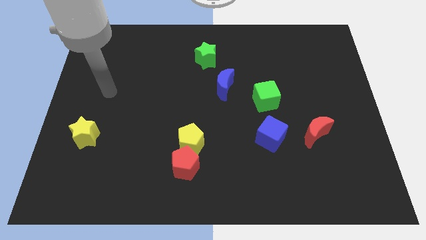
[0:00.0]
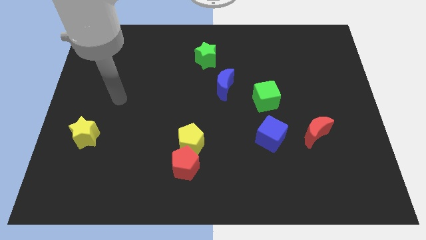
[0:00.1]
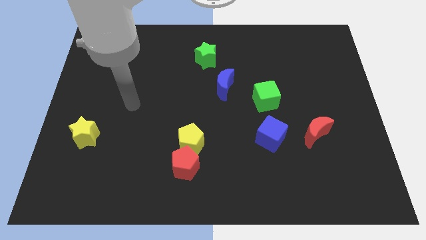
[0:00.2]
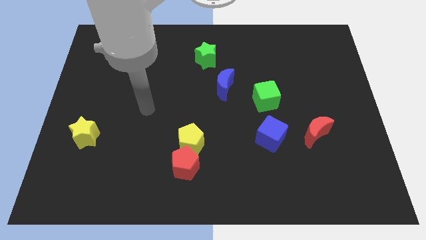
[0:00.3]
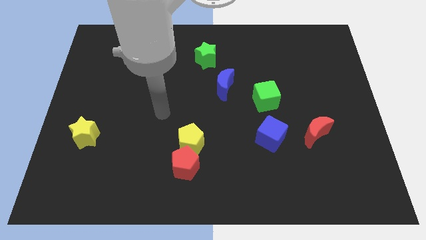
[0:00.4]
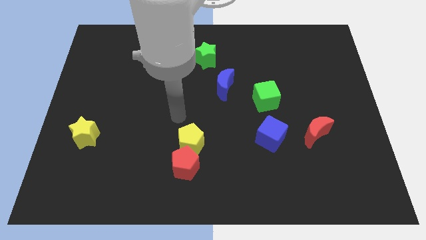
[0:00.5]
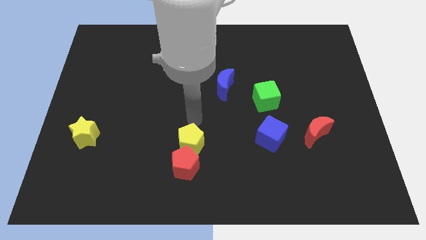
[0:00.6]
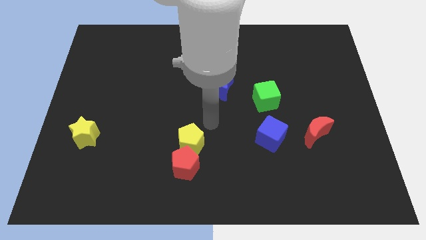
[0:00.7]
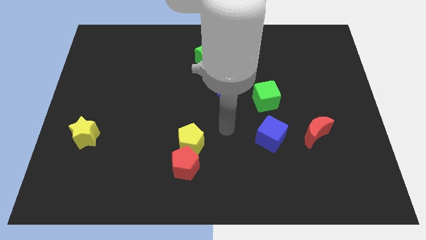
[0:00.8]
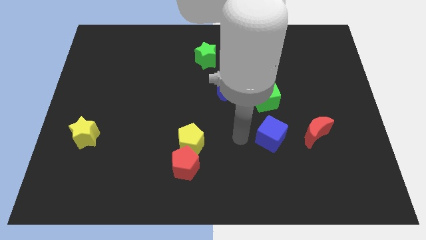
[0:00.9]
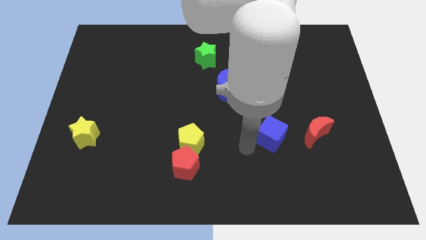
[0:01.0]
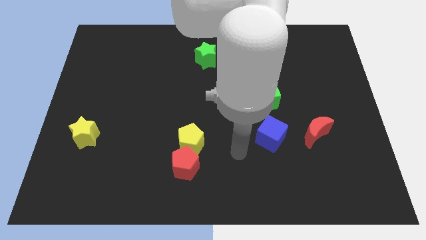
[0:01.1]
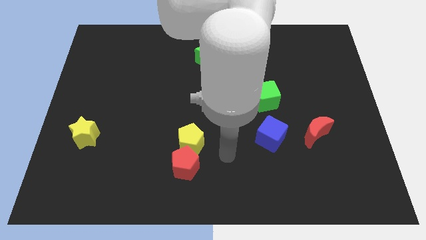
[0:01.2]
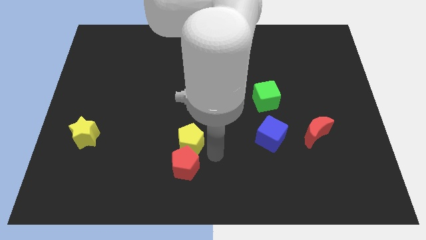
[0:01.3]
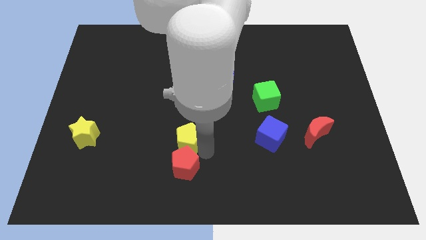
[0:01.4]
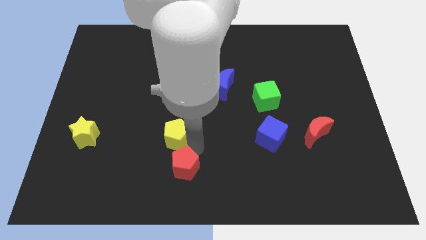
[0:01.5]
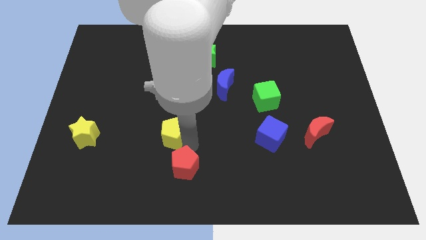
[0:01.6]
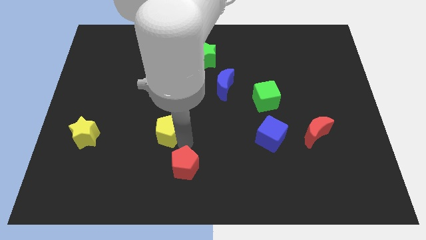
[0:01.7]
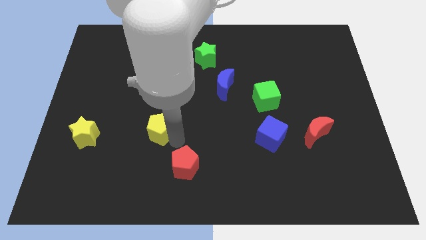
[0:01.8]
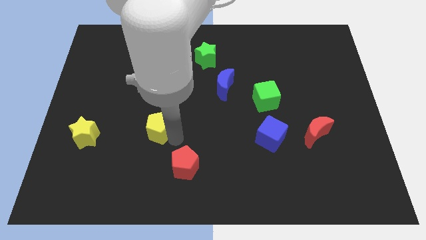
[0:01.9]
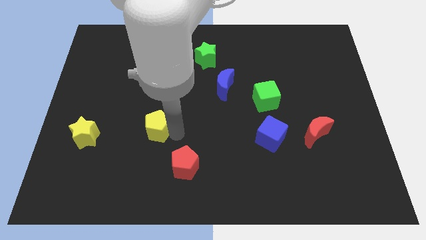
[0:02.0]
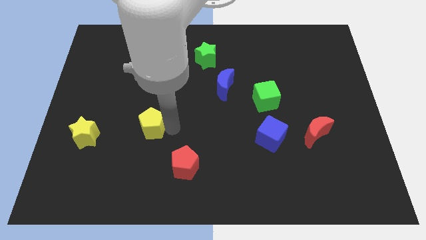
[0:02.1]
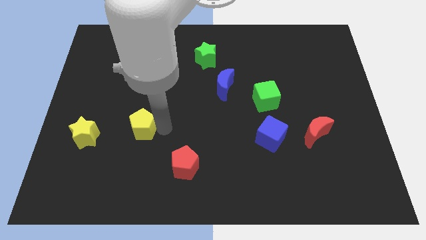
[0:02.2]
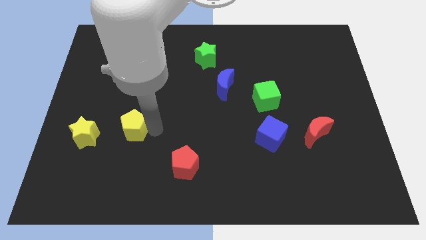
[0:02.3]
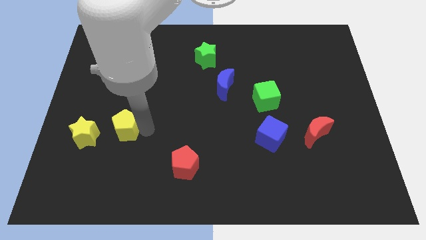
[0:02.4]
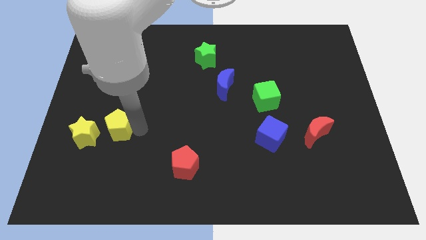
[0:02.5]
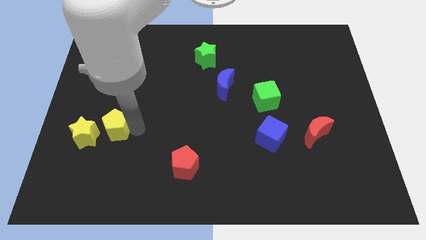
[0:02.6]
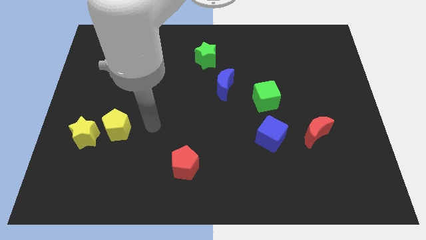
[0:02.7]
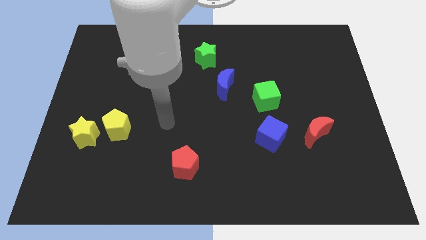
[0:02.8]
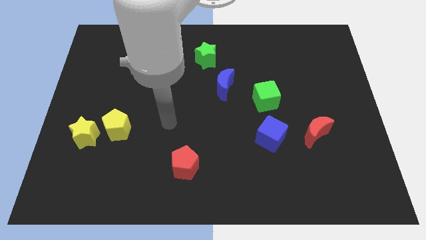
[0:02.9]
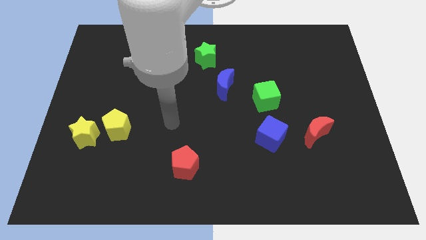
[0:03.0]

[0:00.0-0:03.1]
move the yellow pentagon near to the yellow star

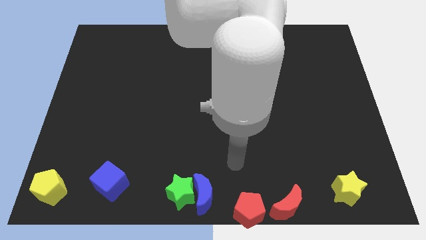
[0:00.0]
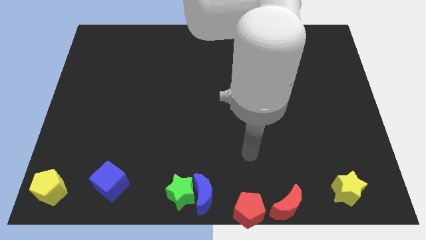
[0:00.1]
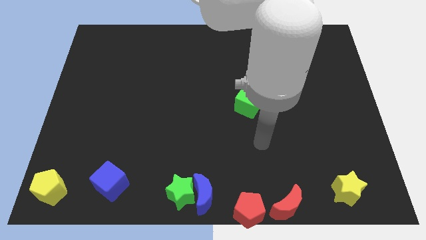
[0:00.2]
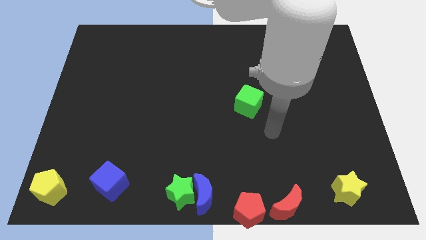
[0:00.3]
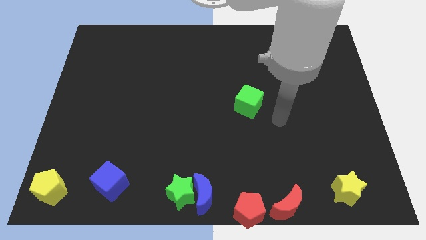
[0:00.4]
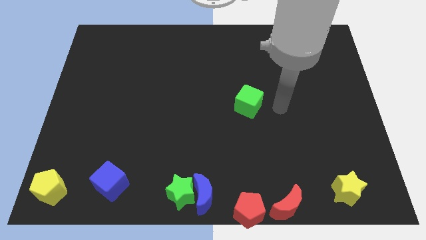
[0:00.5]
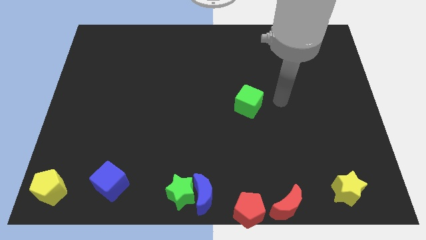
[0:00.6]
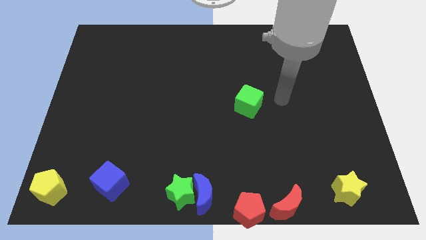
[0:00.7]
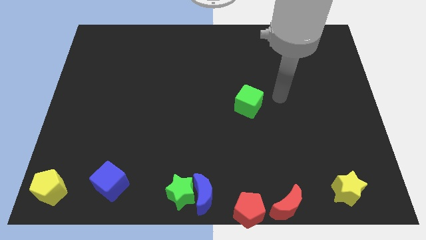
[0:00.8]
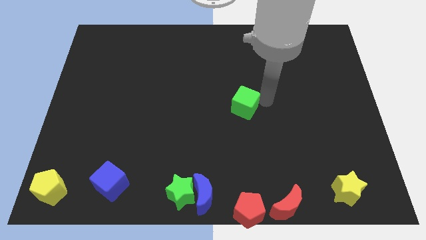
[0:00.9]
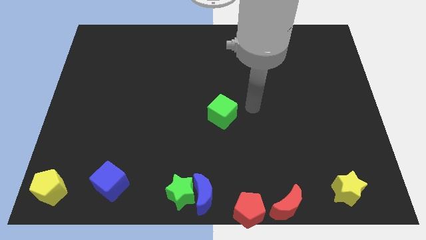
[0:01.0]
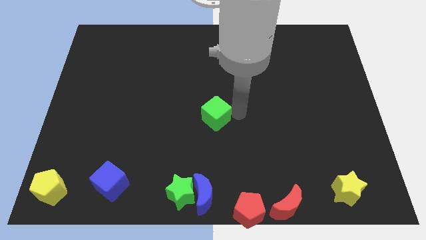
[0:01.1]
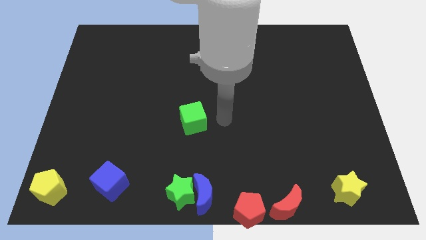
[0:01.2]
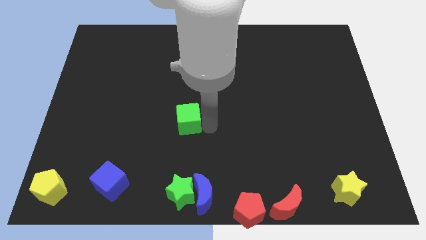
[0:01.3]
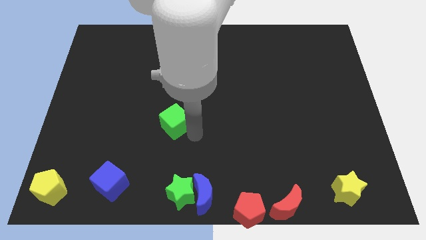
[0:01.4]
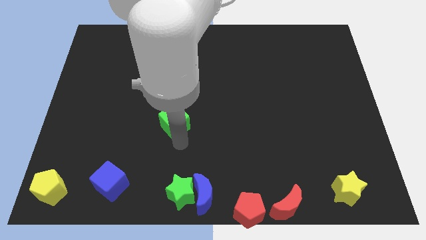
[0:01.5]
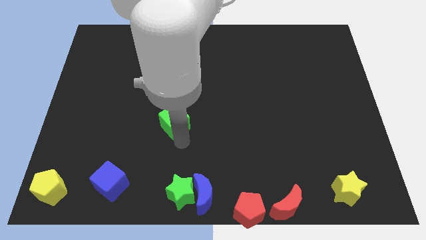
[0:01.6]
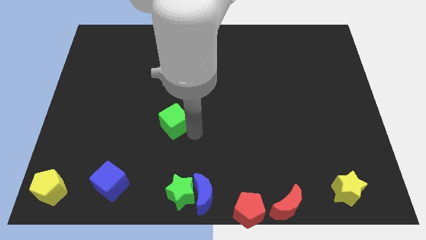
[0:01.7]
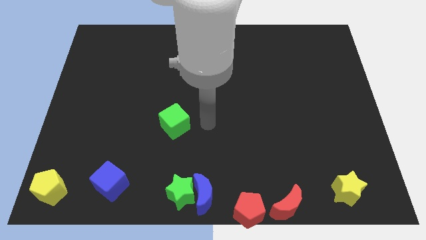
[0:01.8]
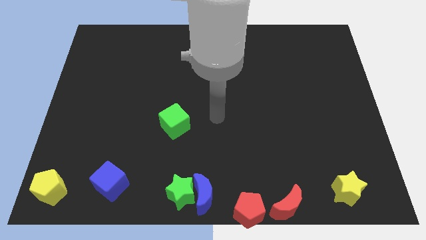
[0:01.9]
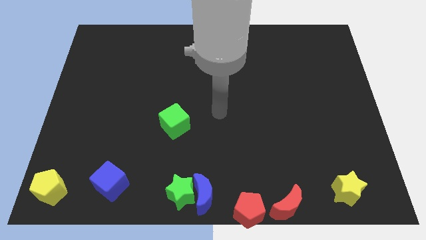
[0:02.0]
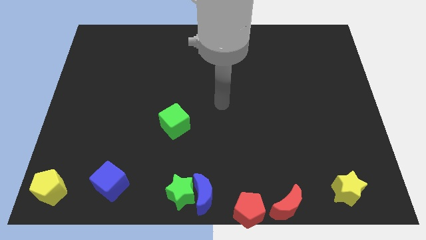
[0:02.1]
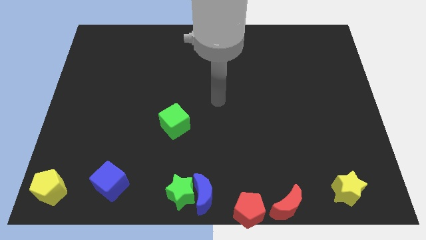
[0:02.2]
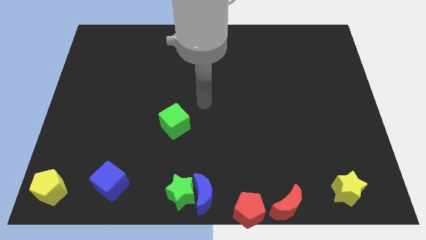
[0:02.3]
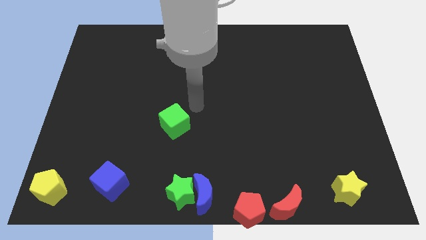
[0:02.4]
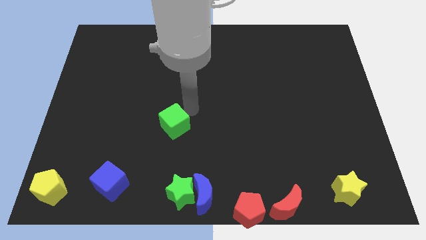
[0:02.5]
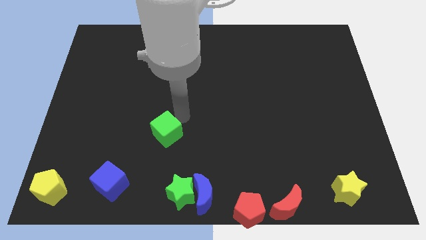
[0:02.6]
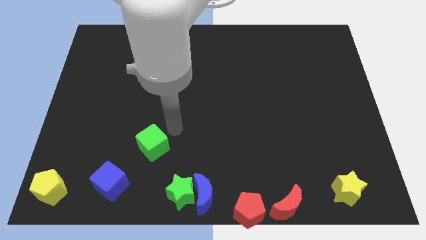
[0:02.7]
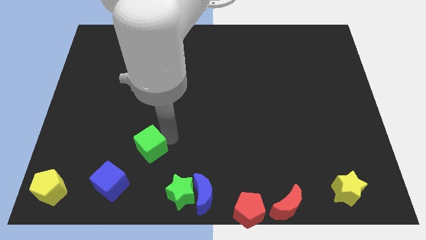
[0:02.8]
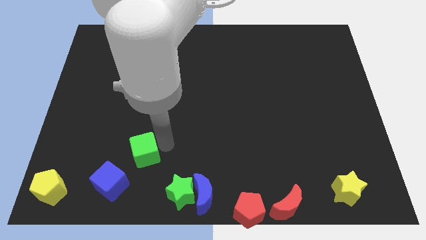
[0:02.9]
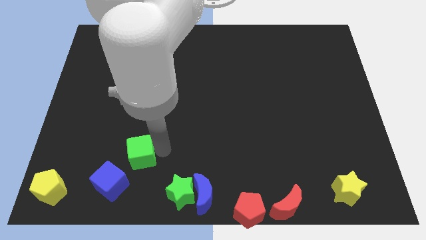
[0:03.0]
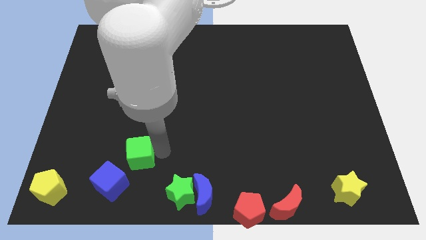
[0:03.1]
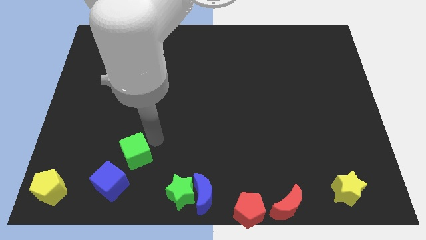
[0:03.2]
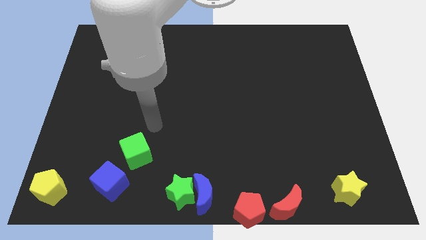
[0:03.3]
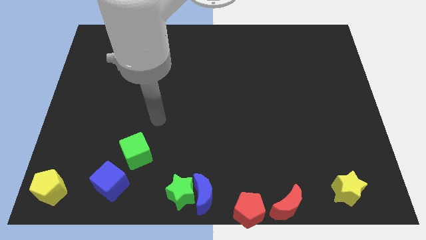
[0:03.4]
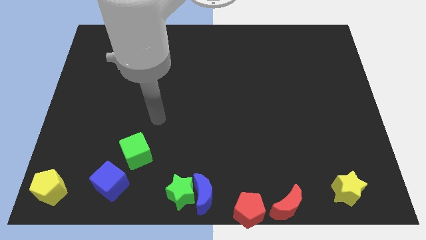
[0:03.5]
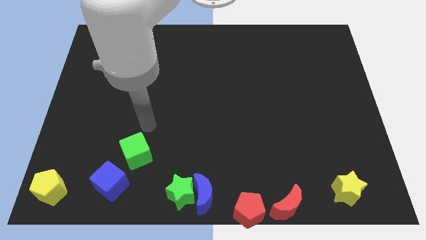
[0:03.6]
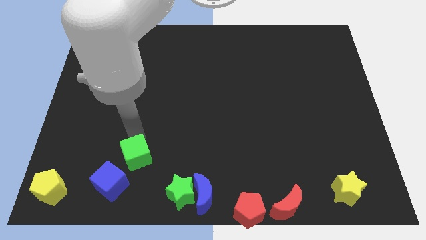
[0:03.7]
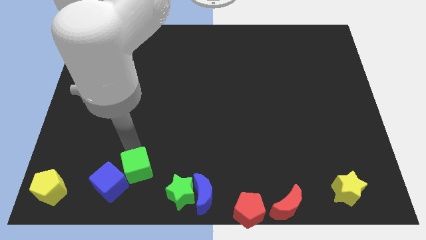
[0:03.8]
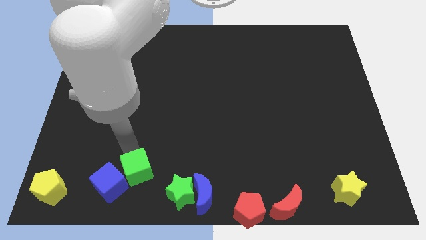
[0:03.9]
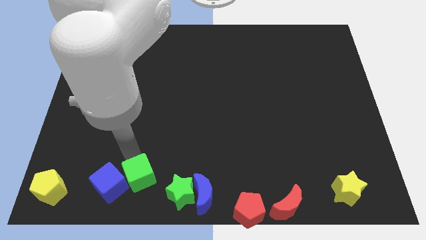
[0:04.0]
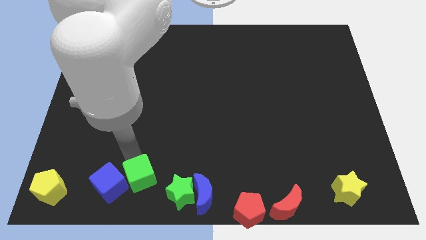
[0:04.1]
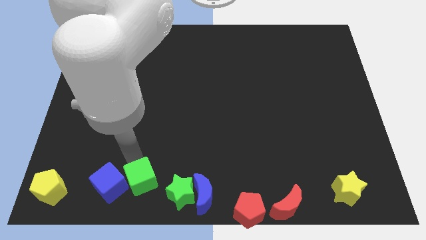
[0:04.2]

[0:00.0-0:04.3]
make a pair of cubes at the bottom side of the table

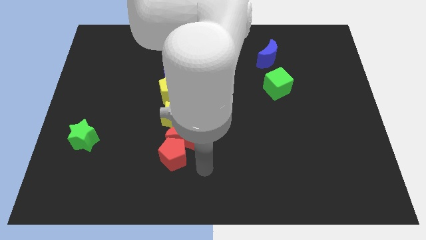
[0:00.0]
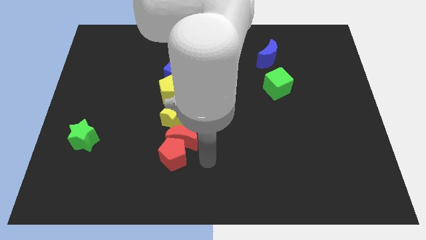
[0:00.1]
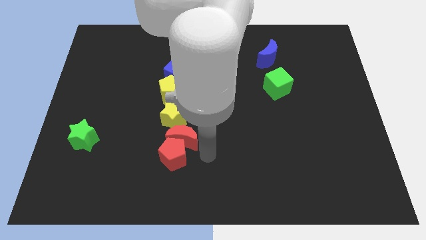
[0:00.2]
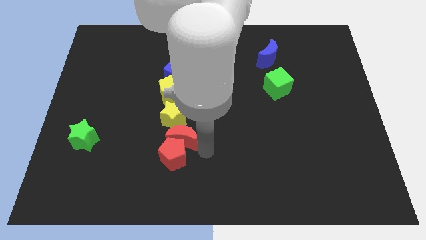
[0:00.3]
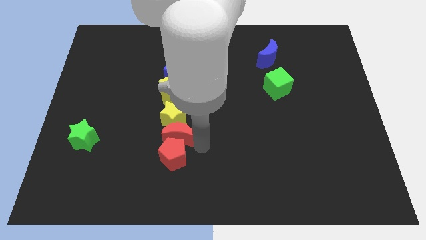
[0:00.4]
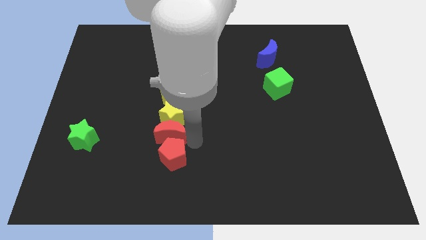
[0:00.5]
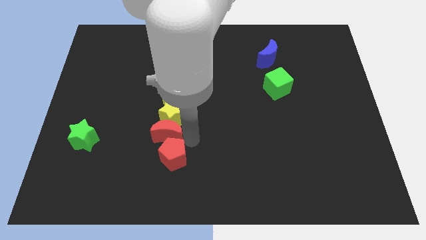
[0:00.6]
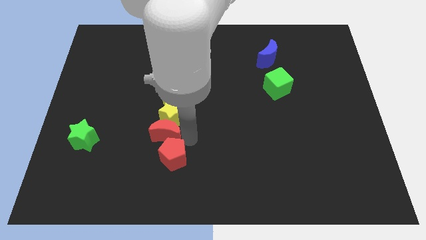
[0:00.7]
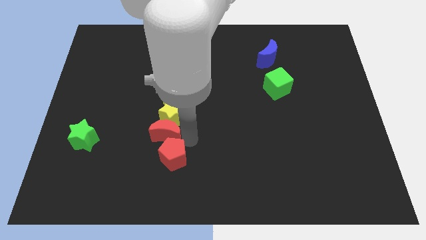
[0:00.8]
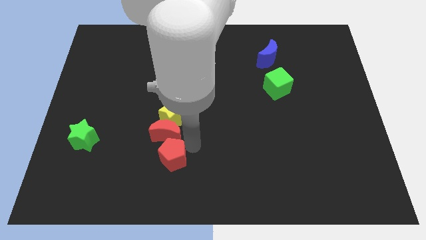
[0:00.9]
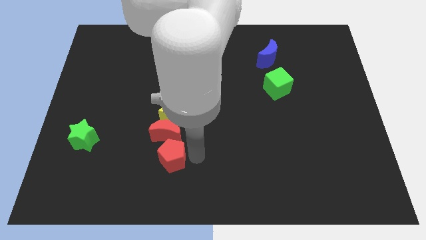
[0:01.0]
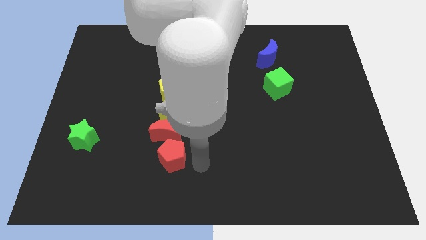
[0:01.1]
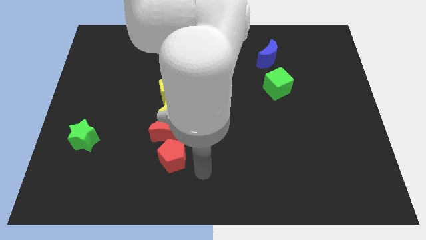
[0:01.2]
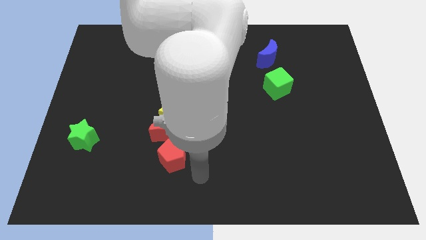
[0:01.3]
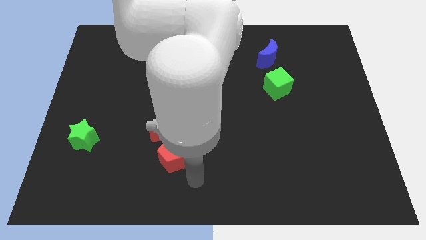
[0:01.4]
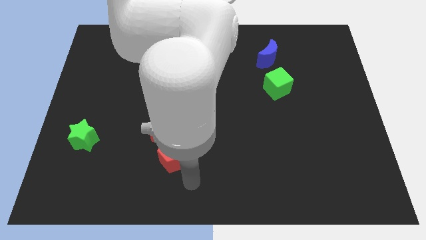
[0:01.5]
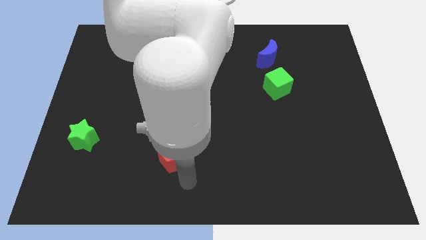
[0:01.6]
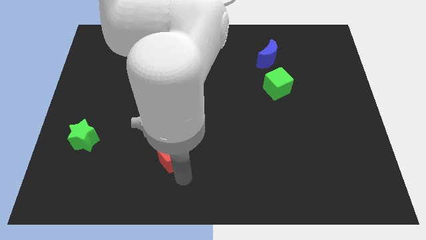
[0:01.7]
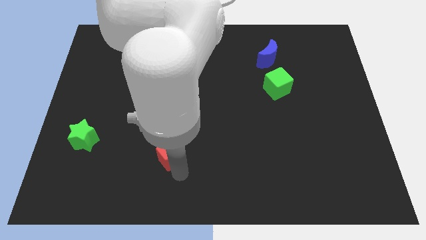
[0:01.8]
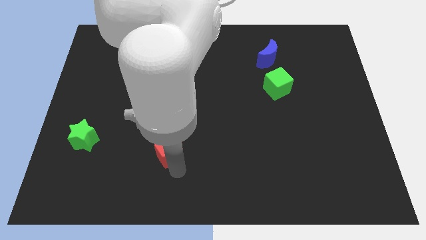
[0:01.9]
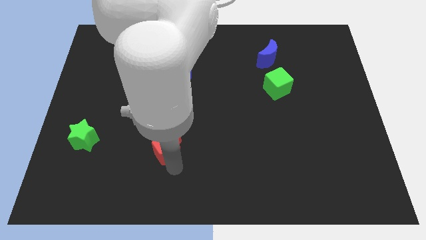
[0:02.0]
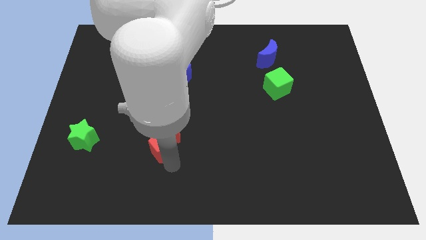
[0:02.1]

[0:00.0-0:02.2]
slightly move red crescent above red pentagon
